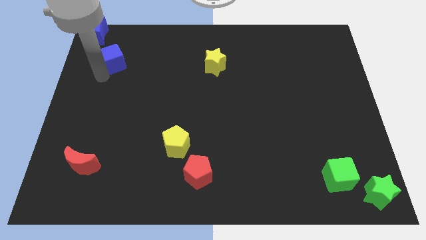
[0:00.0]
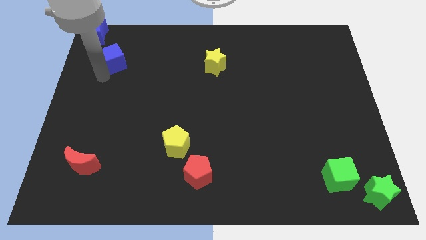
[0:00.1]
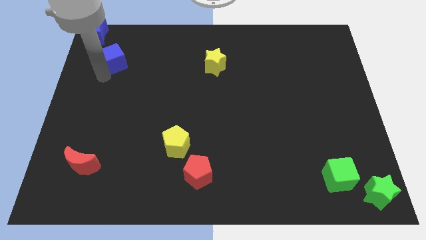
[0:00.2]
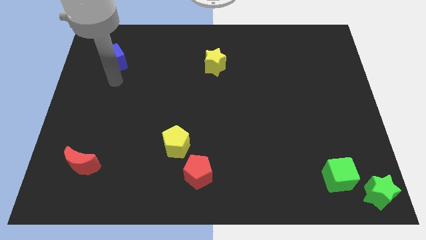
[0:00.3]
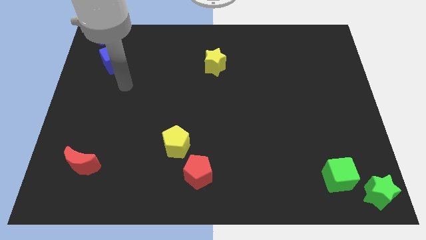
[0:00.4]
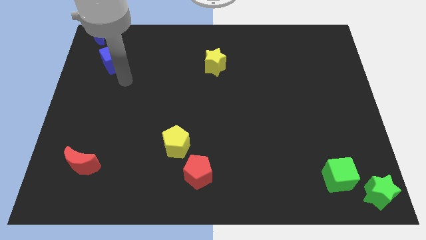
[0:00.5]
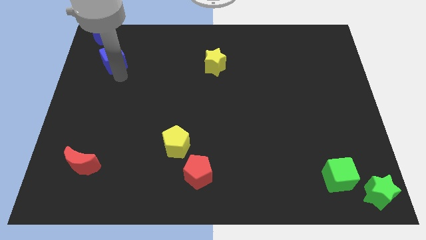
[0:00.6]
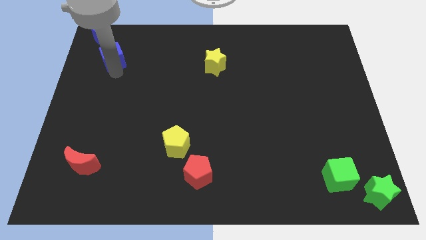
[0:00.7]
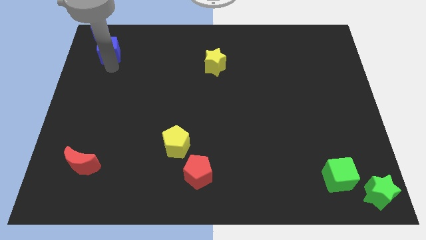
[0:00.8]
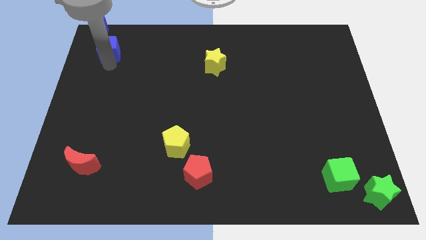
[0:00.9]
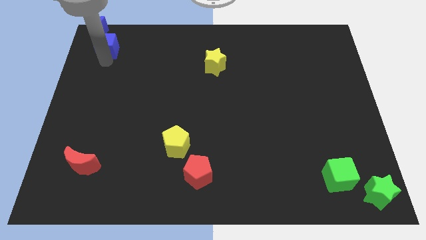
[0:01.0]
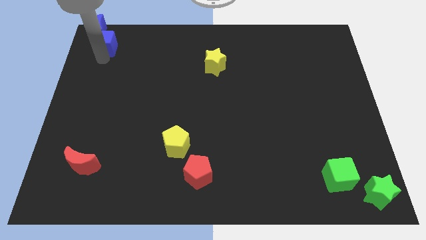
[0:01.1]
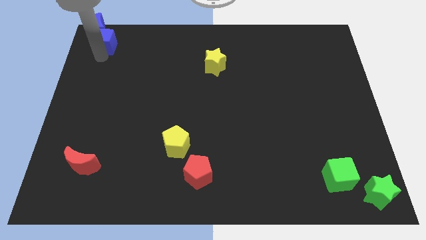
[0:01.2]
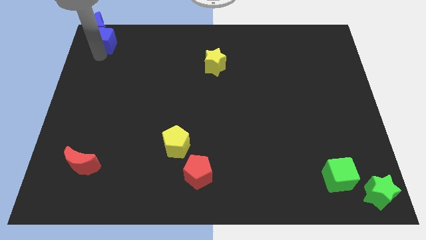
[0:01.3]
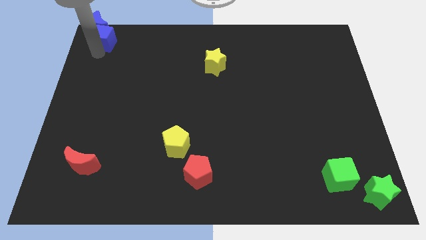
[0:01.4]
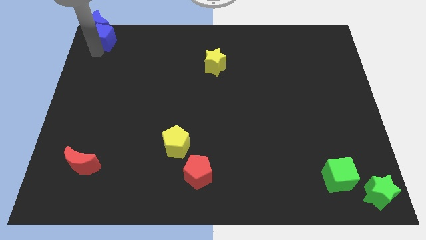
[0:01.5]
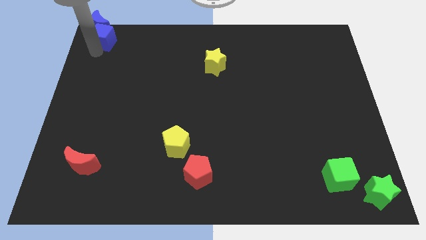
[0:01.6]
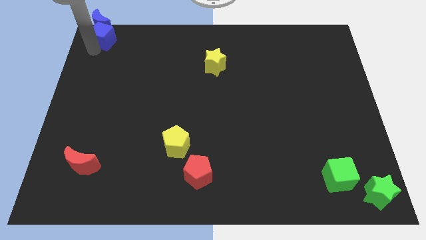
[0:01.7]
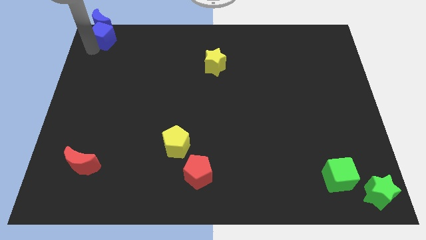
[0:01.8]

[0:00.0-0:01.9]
push the blue cubeinto the blue crescent on the top left corner of the board

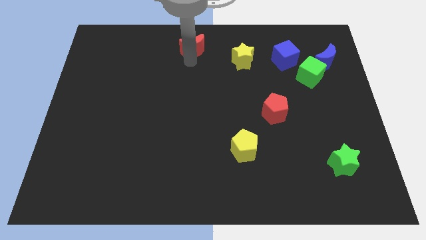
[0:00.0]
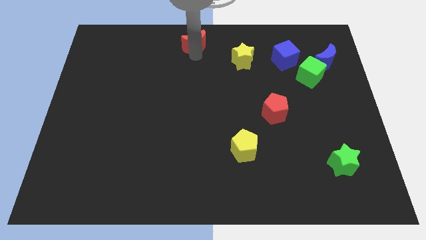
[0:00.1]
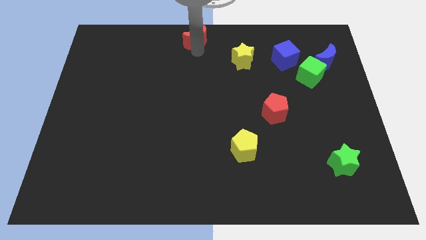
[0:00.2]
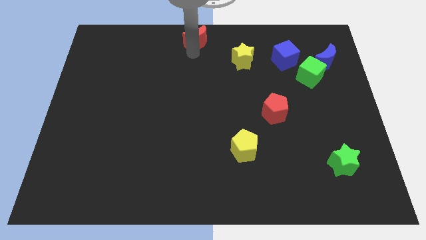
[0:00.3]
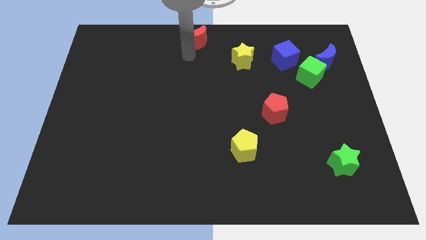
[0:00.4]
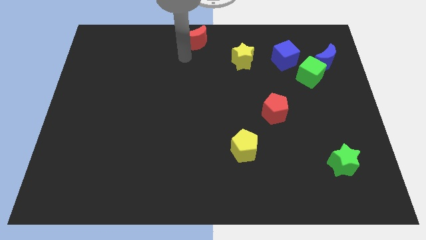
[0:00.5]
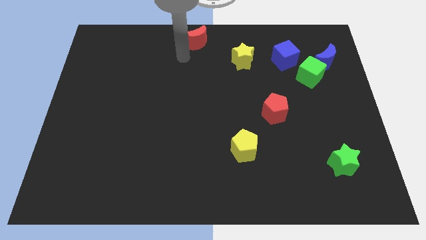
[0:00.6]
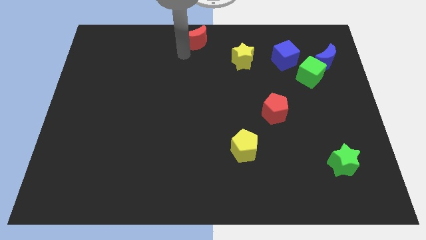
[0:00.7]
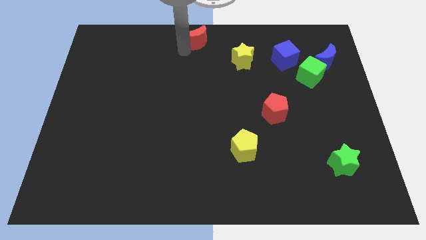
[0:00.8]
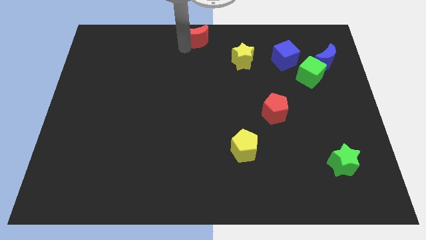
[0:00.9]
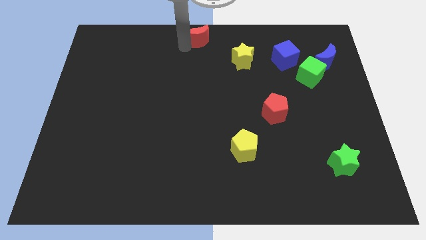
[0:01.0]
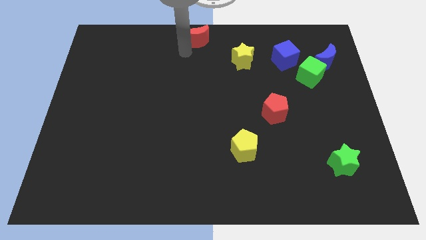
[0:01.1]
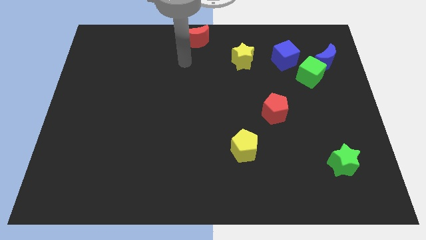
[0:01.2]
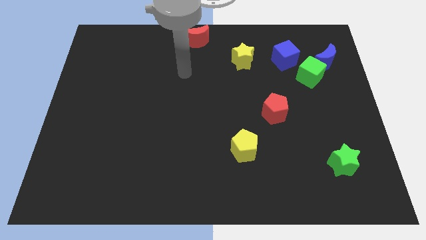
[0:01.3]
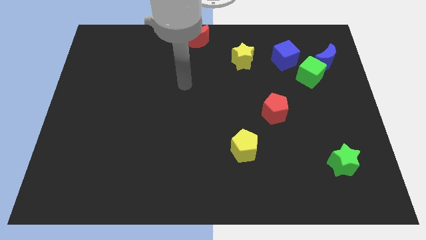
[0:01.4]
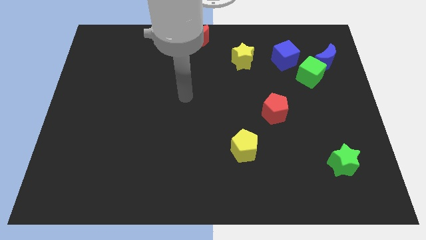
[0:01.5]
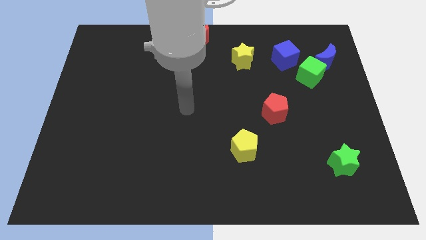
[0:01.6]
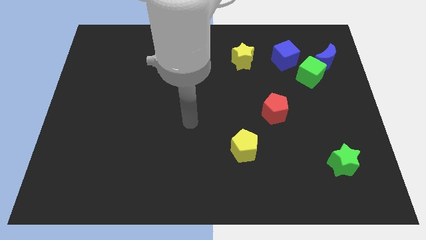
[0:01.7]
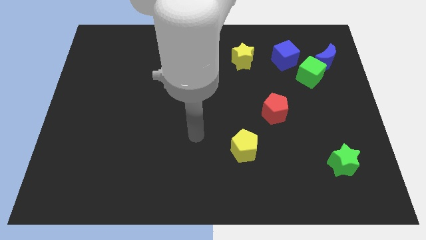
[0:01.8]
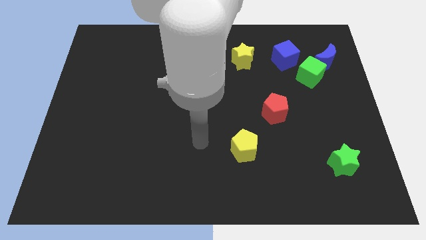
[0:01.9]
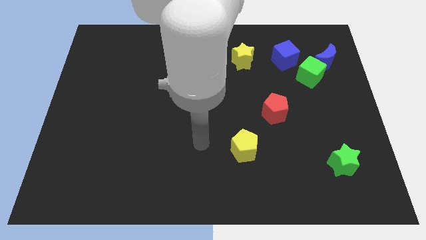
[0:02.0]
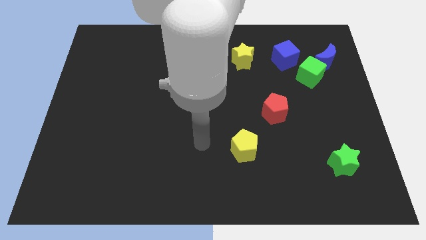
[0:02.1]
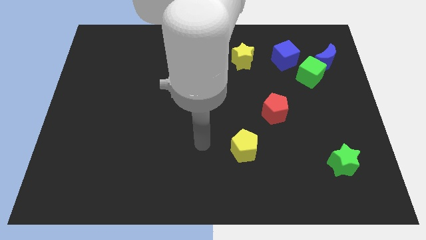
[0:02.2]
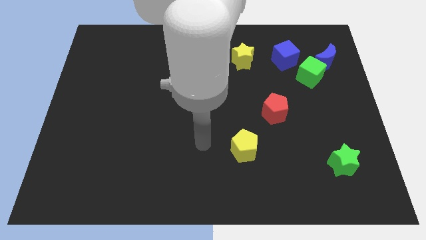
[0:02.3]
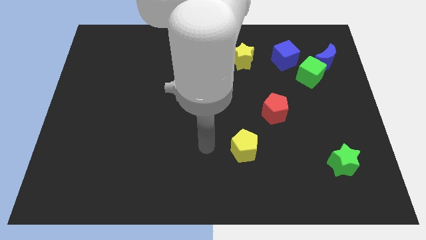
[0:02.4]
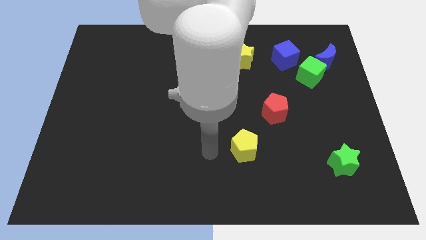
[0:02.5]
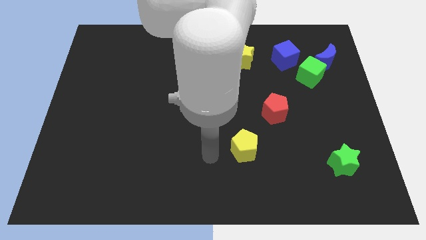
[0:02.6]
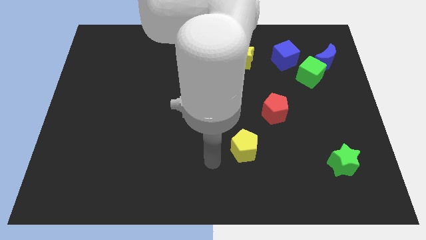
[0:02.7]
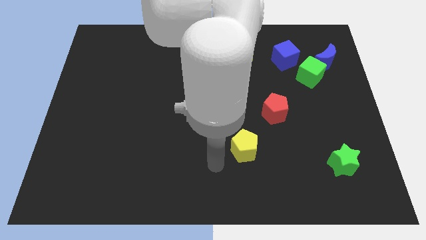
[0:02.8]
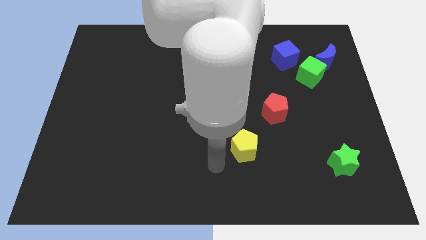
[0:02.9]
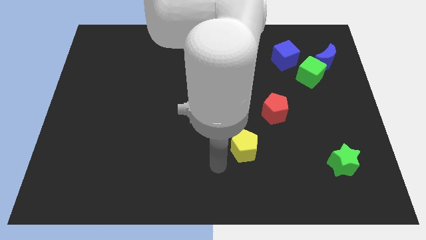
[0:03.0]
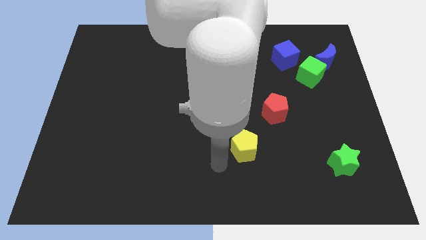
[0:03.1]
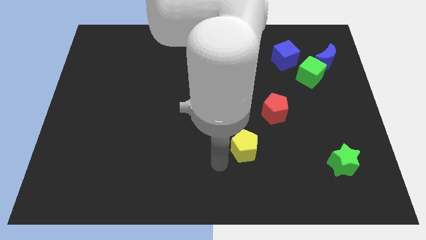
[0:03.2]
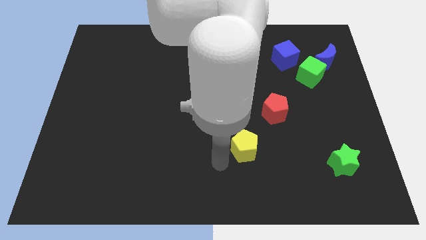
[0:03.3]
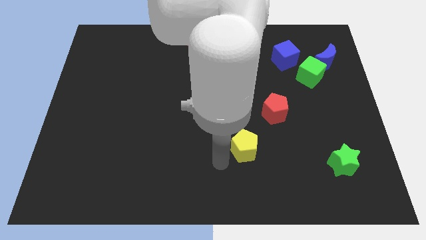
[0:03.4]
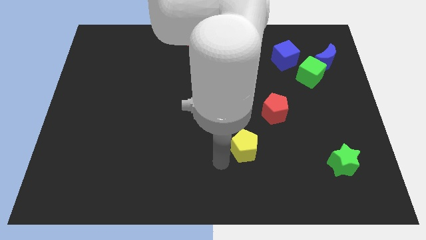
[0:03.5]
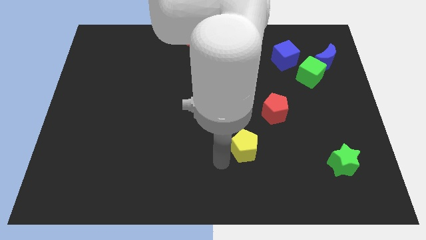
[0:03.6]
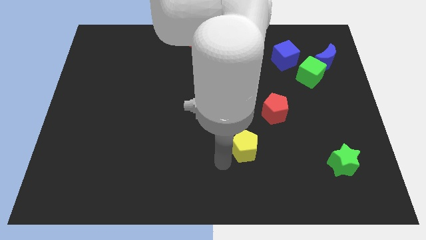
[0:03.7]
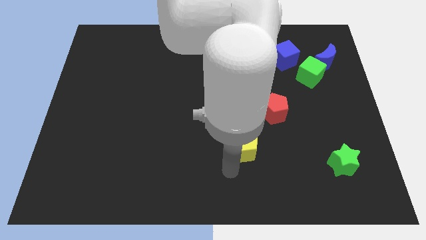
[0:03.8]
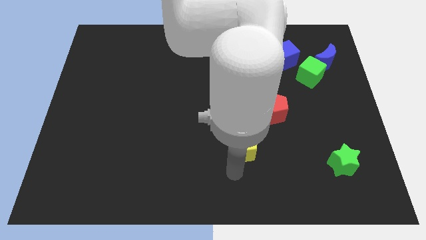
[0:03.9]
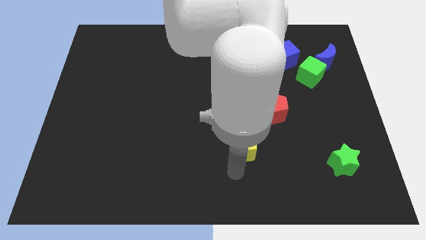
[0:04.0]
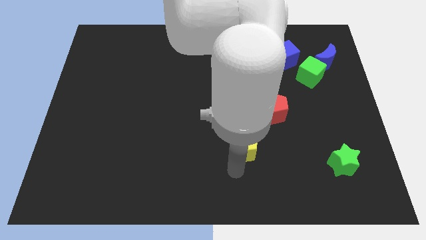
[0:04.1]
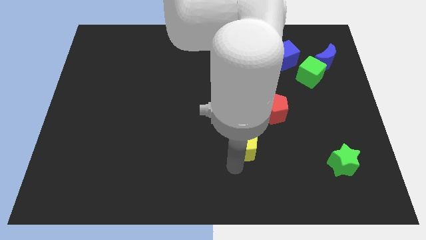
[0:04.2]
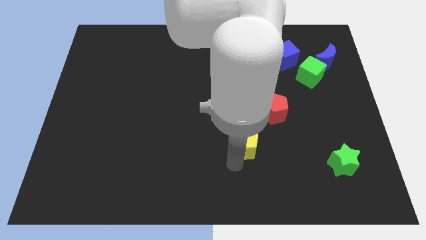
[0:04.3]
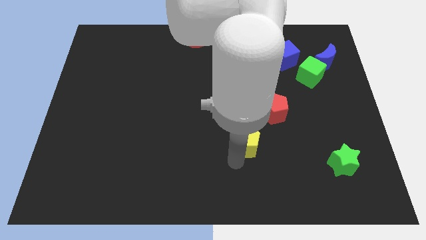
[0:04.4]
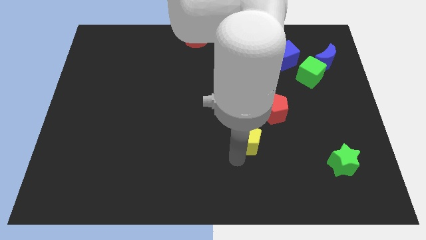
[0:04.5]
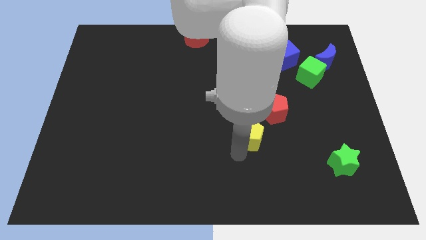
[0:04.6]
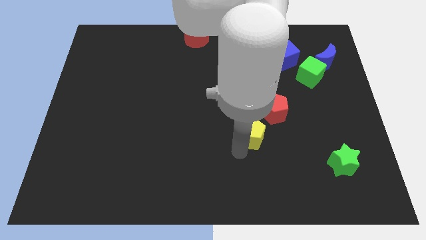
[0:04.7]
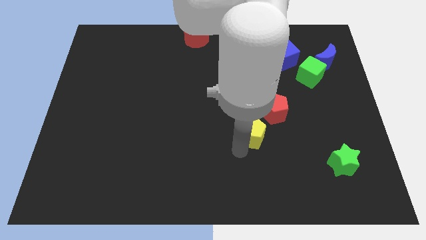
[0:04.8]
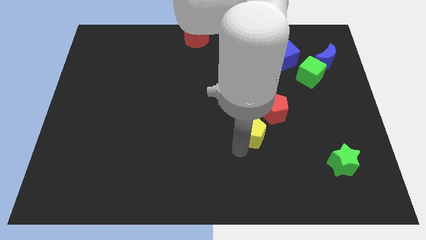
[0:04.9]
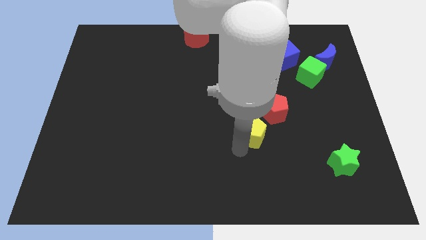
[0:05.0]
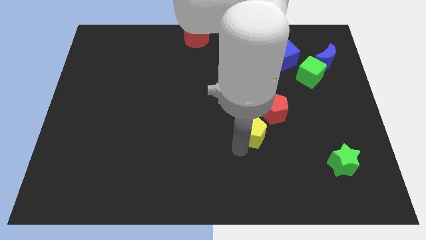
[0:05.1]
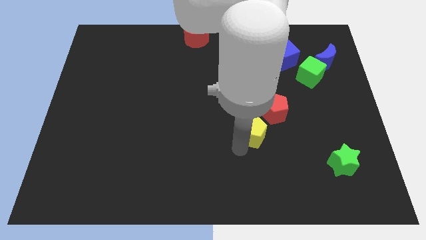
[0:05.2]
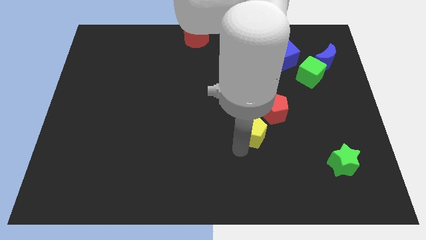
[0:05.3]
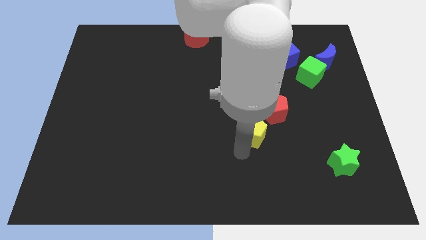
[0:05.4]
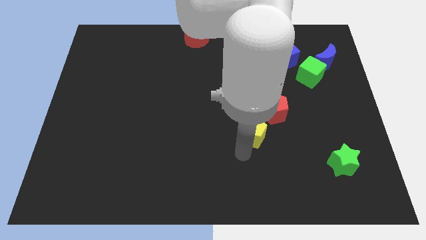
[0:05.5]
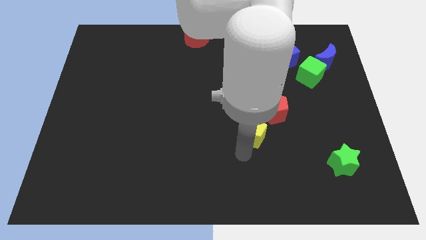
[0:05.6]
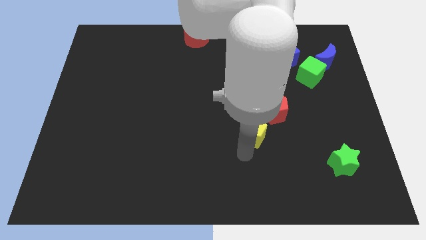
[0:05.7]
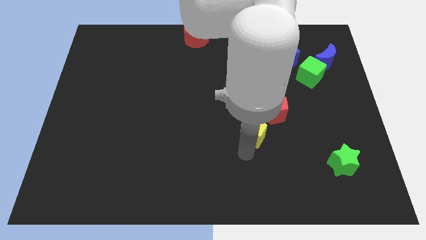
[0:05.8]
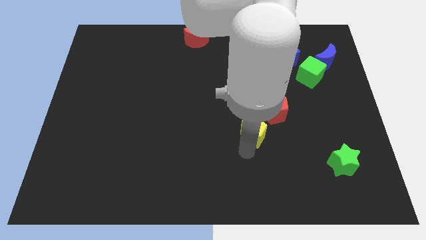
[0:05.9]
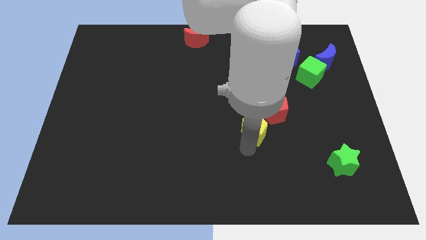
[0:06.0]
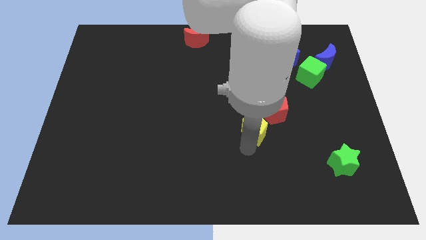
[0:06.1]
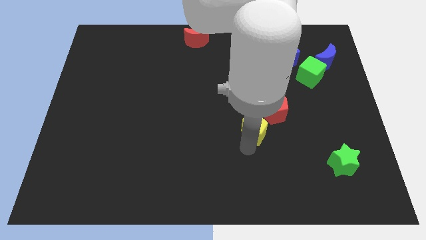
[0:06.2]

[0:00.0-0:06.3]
move the yellow pentagon close to red pentagon

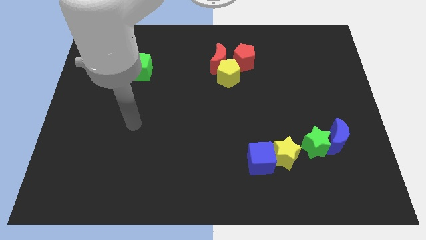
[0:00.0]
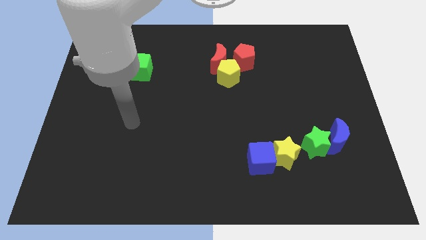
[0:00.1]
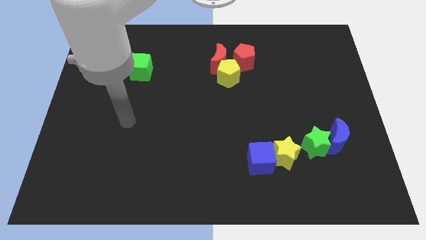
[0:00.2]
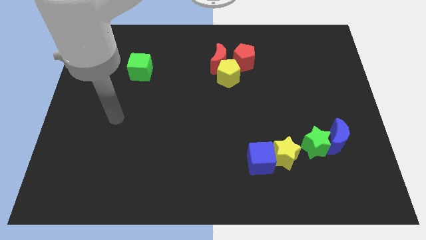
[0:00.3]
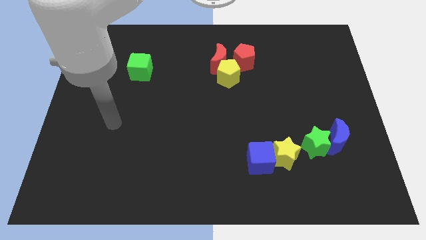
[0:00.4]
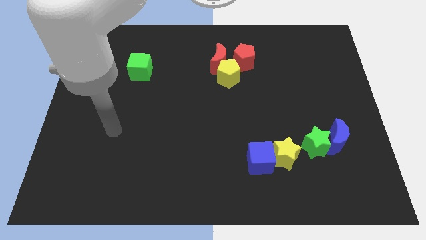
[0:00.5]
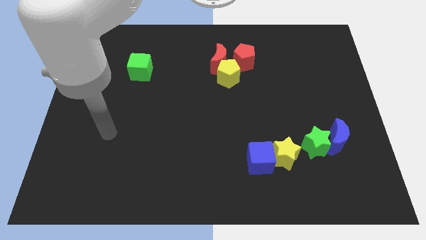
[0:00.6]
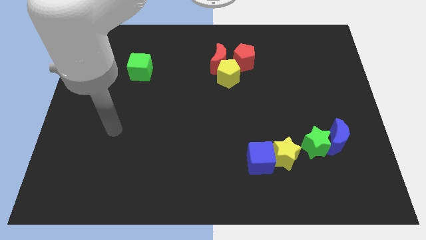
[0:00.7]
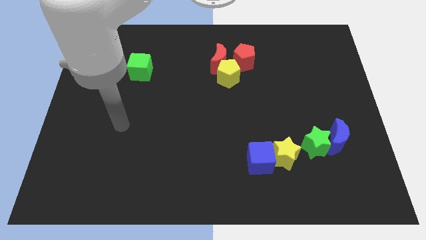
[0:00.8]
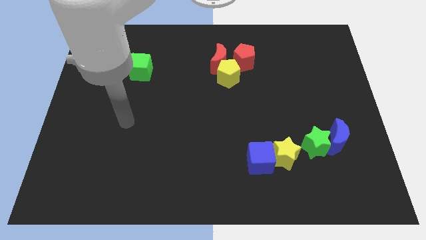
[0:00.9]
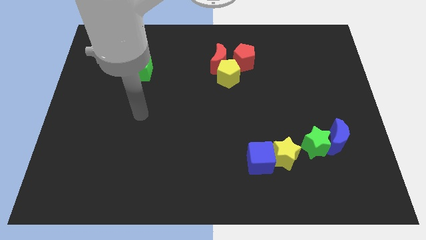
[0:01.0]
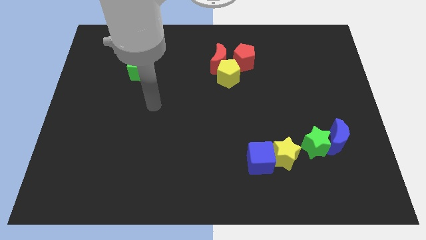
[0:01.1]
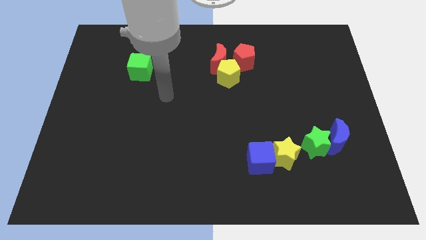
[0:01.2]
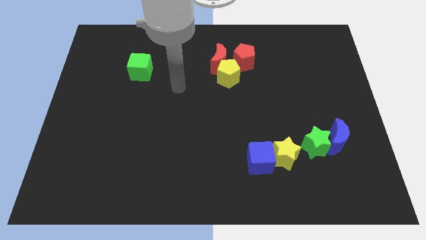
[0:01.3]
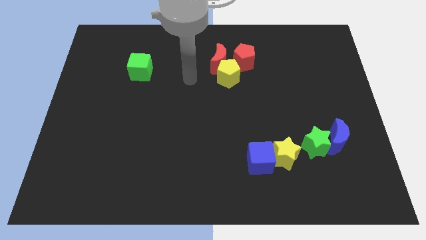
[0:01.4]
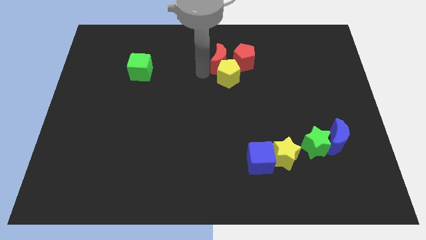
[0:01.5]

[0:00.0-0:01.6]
place your arm at the left of the red crescent
